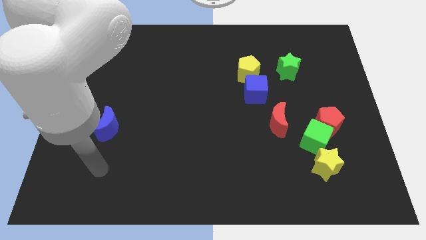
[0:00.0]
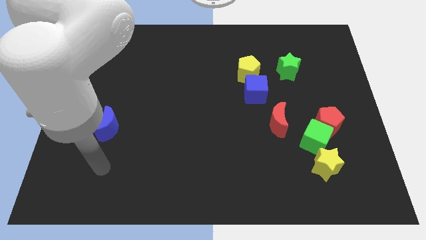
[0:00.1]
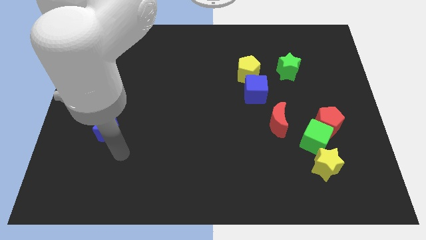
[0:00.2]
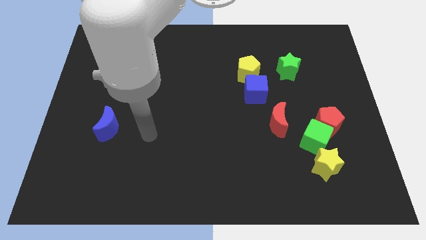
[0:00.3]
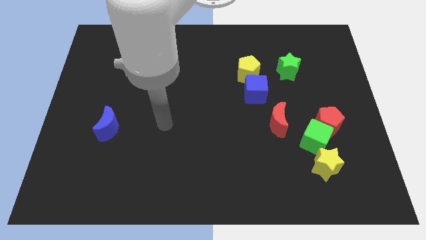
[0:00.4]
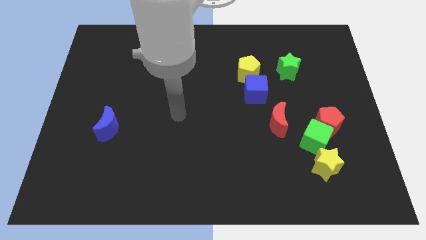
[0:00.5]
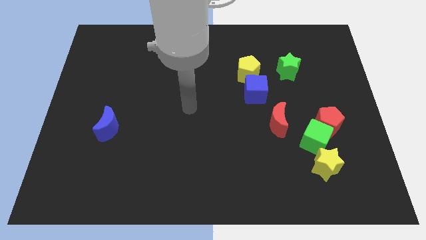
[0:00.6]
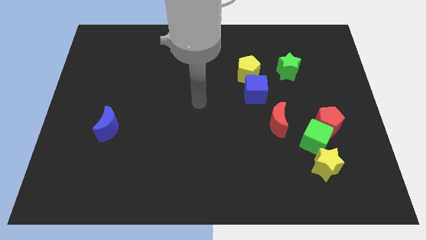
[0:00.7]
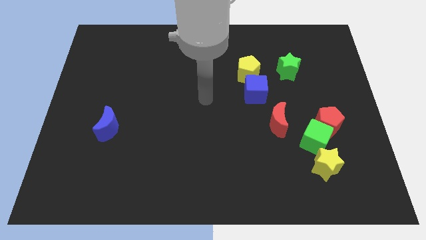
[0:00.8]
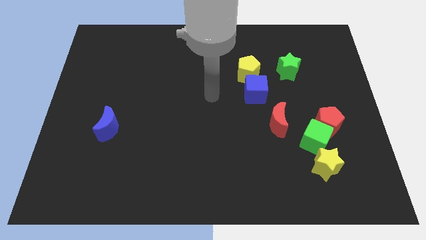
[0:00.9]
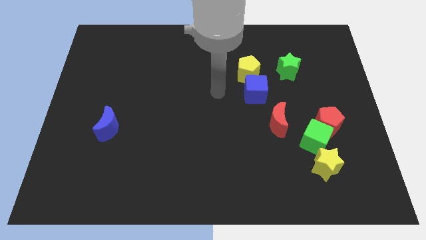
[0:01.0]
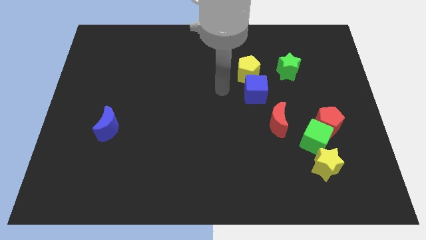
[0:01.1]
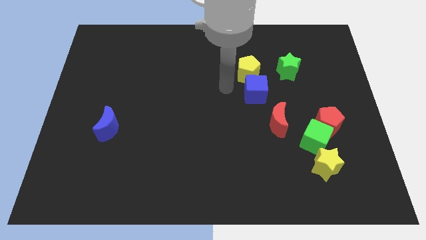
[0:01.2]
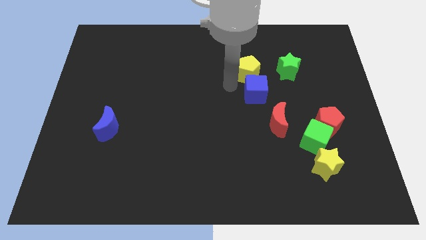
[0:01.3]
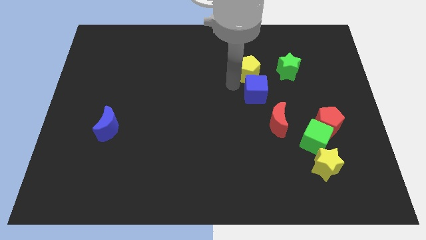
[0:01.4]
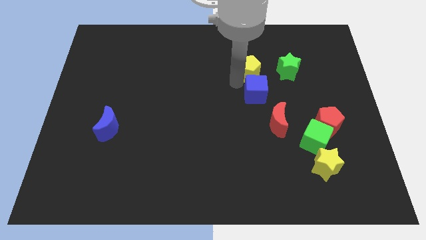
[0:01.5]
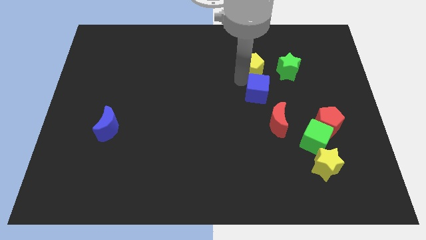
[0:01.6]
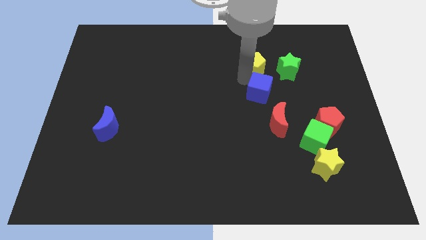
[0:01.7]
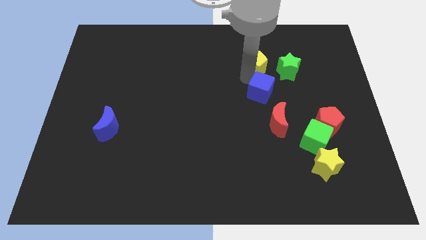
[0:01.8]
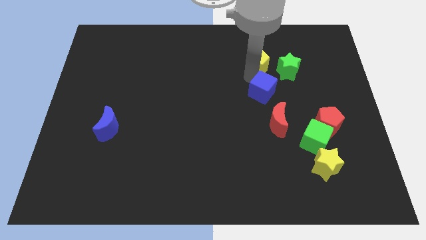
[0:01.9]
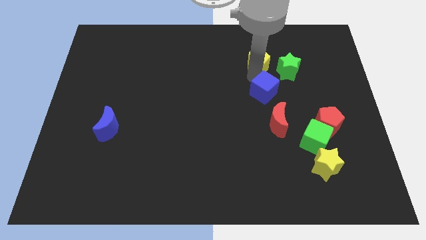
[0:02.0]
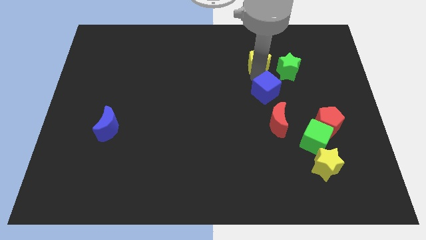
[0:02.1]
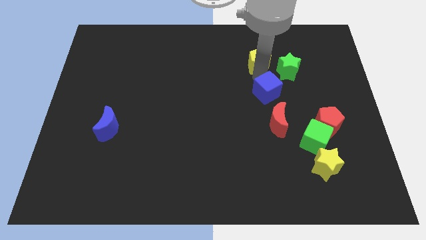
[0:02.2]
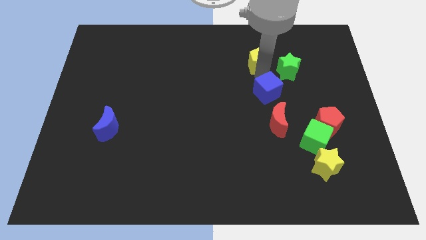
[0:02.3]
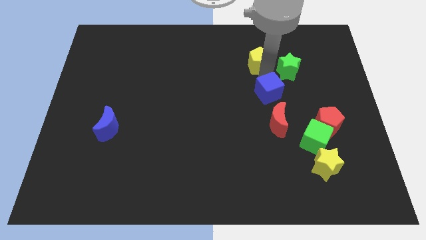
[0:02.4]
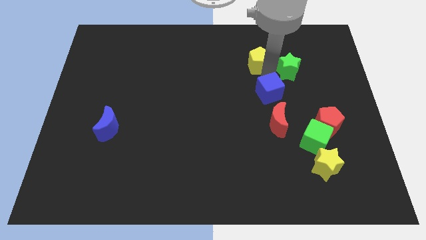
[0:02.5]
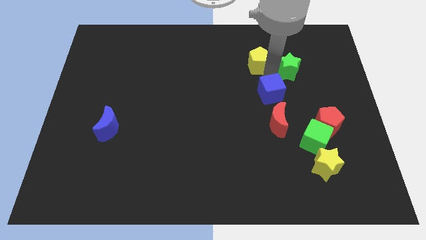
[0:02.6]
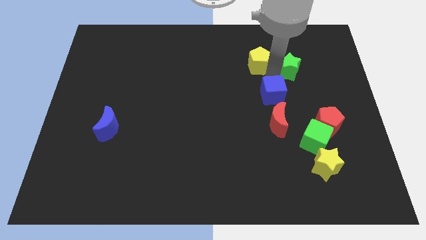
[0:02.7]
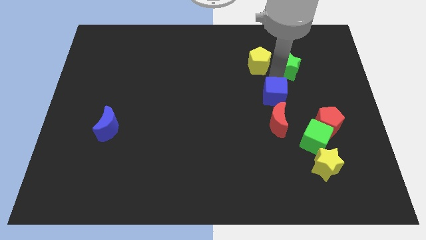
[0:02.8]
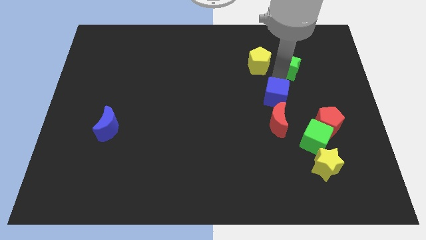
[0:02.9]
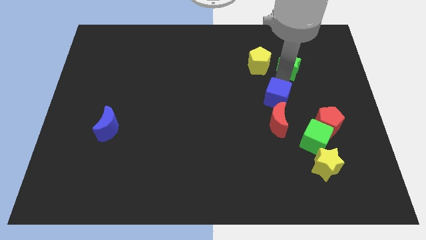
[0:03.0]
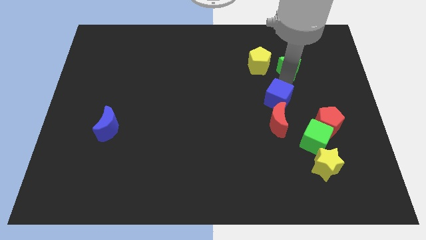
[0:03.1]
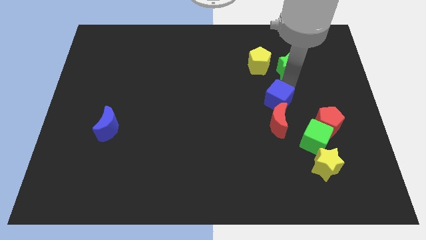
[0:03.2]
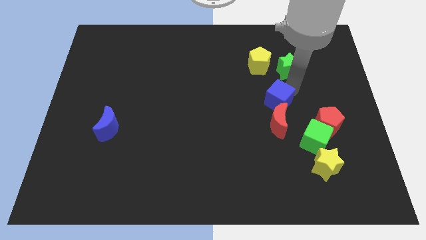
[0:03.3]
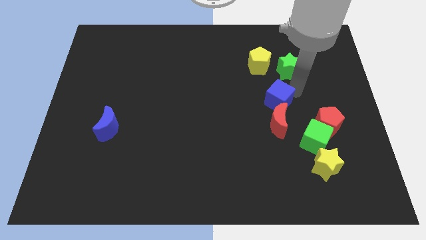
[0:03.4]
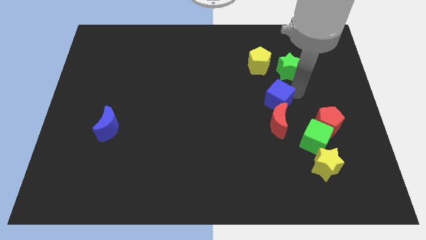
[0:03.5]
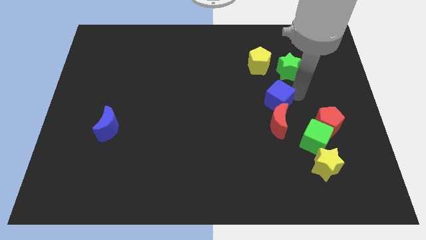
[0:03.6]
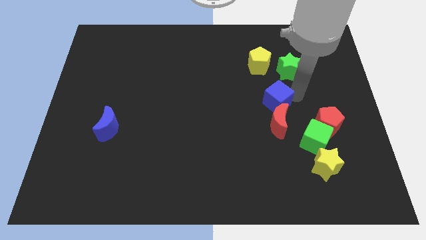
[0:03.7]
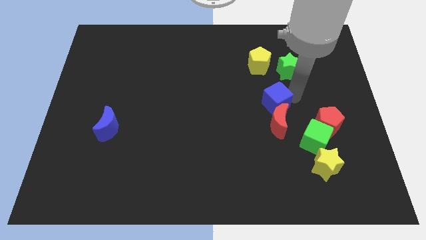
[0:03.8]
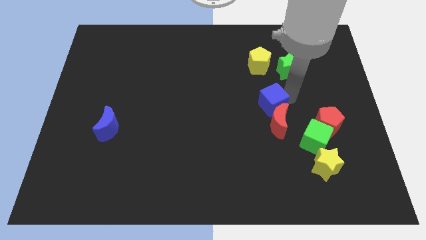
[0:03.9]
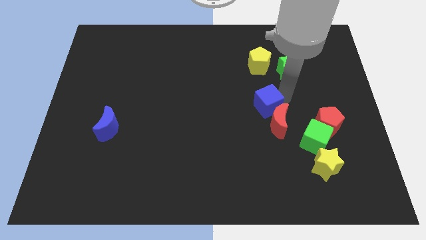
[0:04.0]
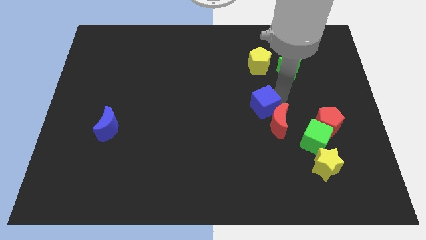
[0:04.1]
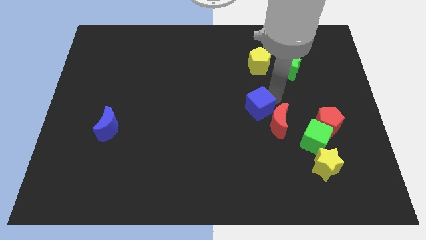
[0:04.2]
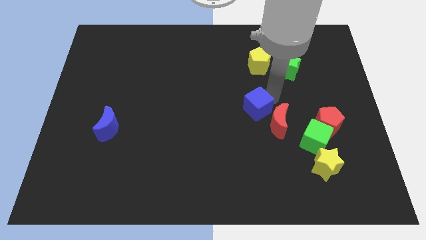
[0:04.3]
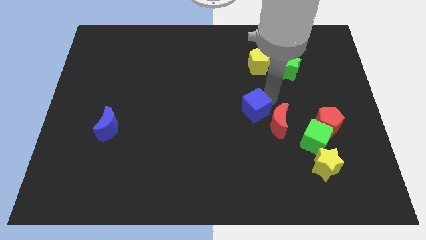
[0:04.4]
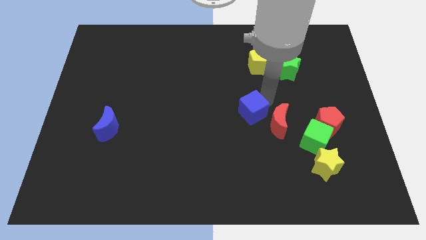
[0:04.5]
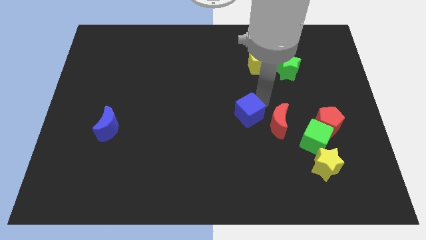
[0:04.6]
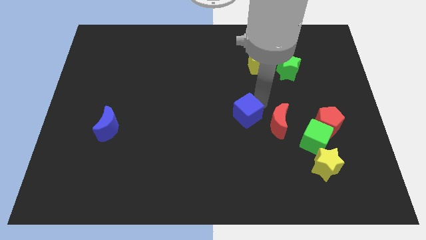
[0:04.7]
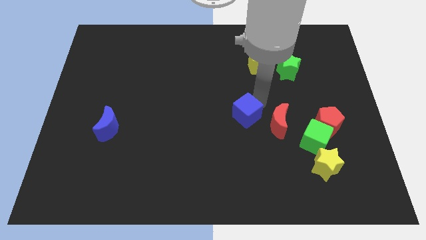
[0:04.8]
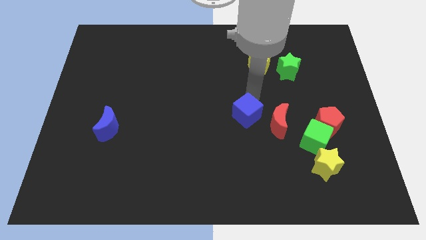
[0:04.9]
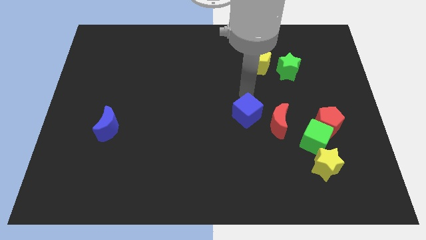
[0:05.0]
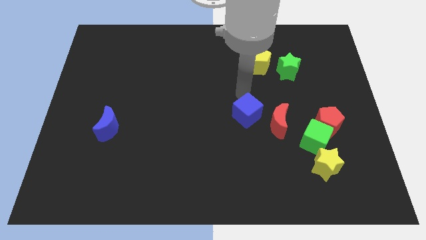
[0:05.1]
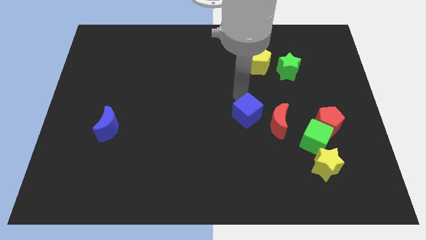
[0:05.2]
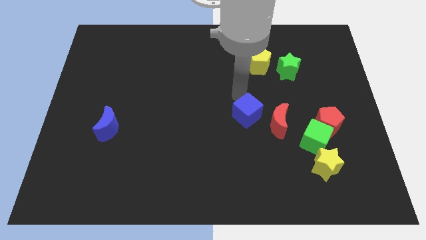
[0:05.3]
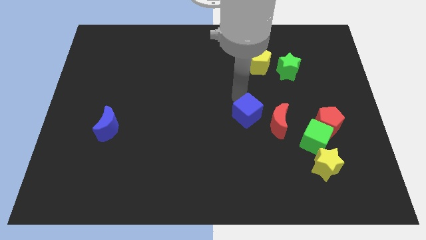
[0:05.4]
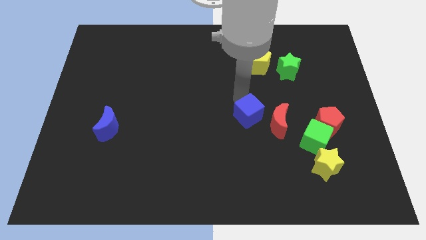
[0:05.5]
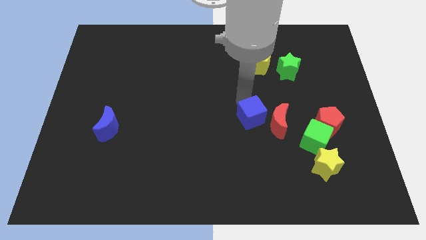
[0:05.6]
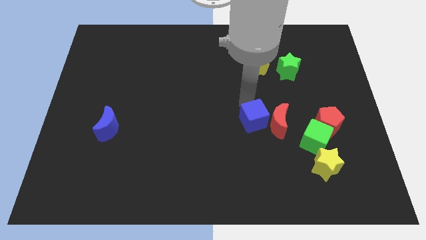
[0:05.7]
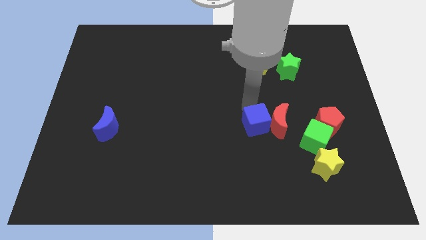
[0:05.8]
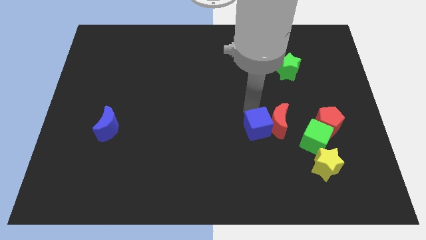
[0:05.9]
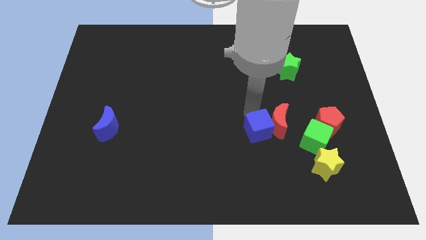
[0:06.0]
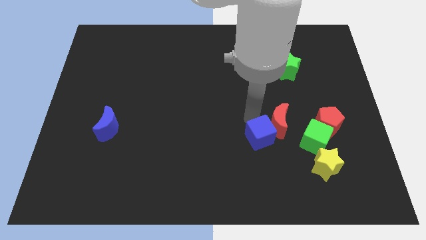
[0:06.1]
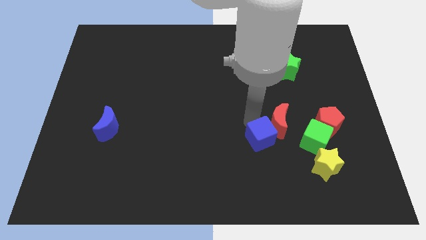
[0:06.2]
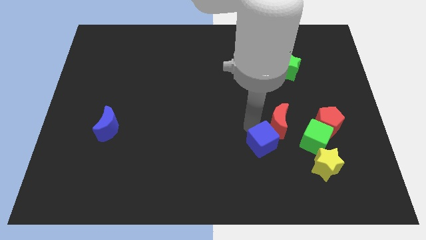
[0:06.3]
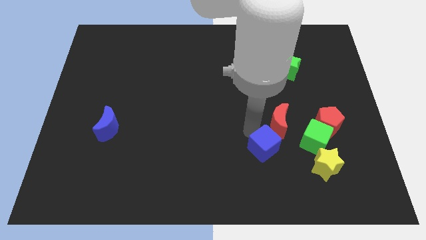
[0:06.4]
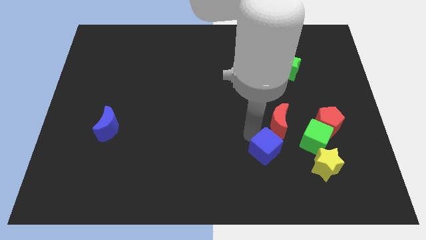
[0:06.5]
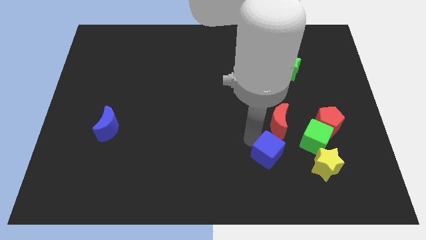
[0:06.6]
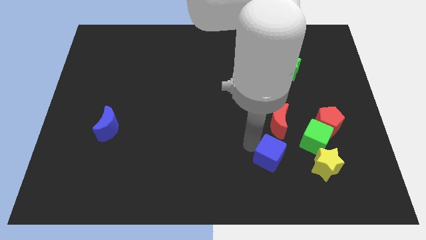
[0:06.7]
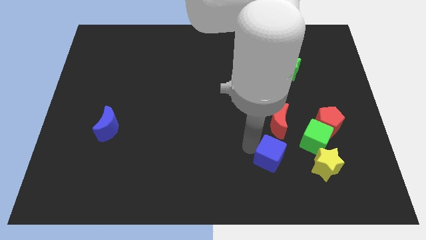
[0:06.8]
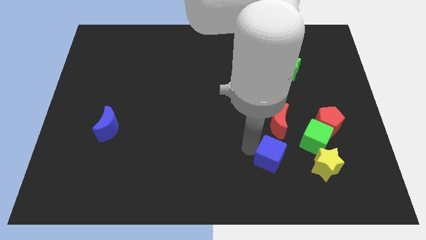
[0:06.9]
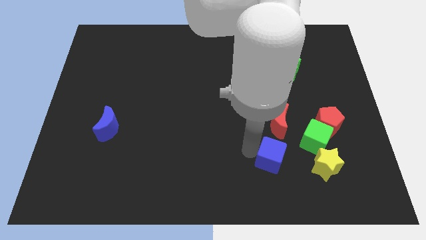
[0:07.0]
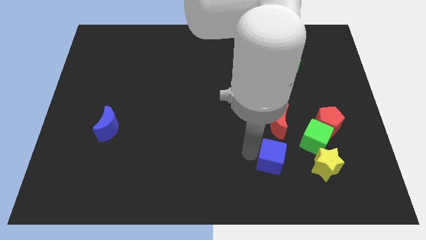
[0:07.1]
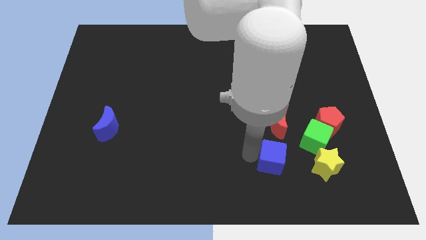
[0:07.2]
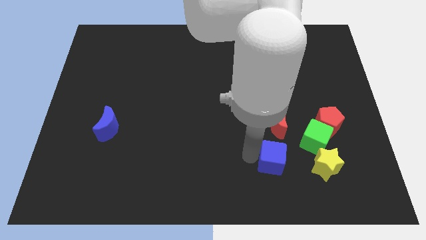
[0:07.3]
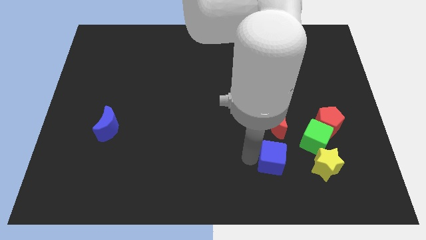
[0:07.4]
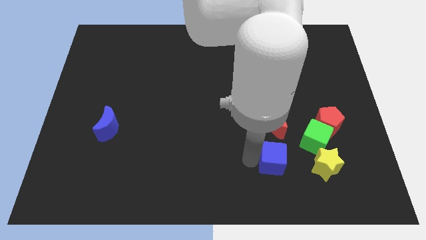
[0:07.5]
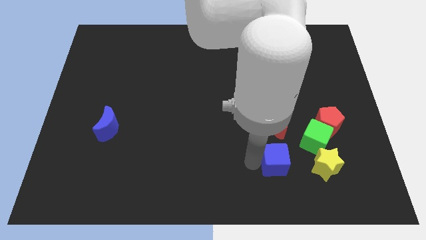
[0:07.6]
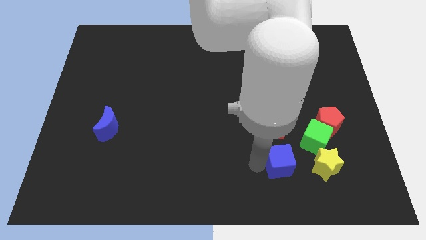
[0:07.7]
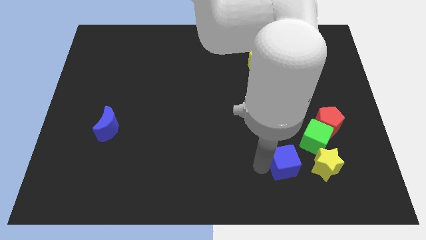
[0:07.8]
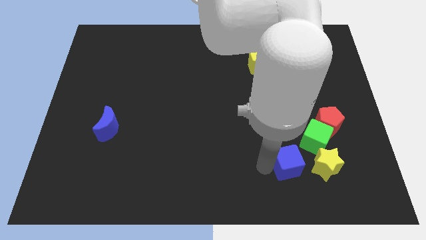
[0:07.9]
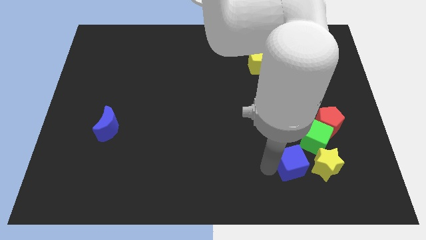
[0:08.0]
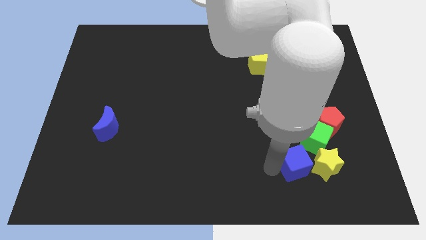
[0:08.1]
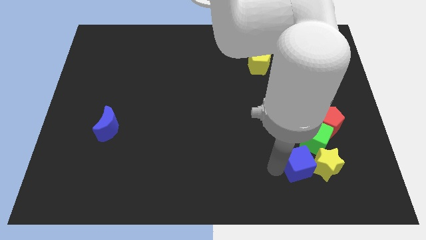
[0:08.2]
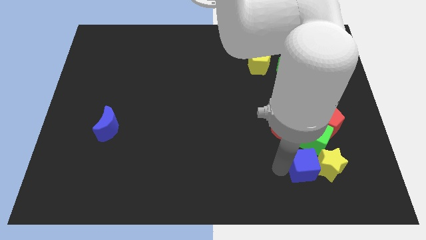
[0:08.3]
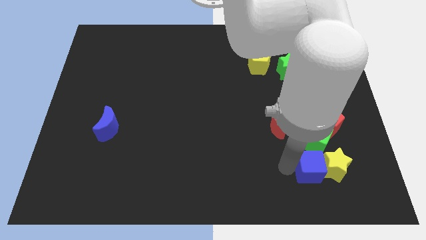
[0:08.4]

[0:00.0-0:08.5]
slide the blue cube close to the yellow star
